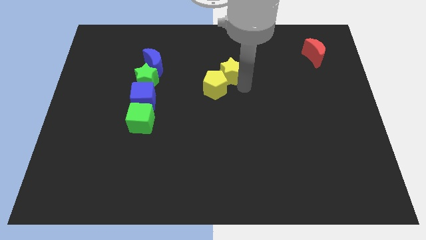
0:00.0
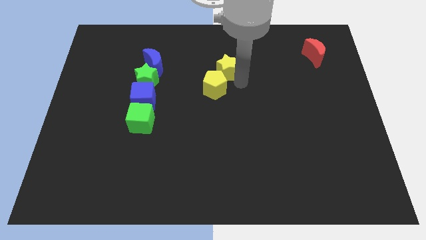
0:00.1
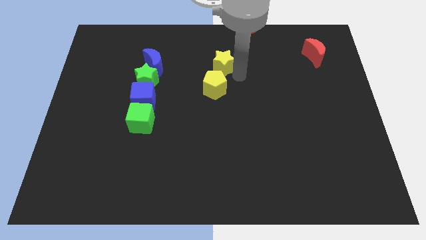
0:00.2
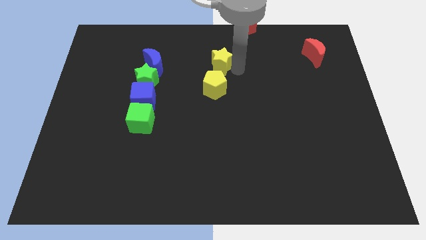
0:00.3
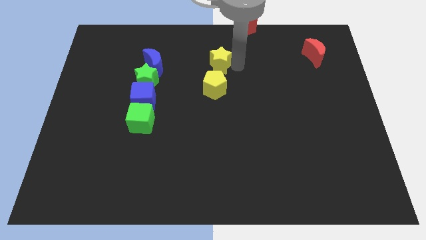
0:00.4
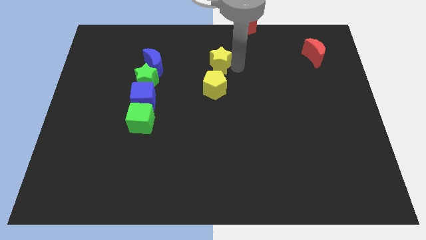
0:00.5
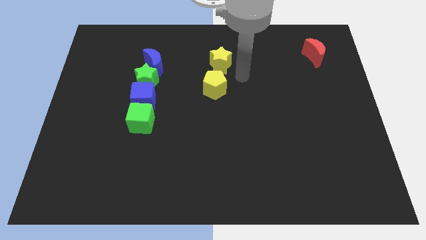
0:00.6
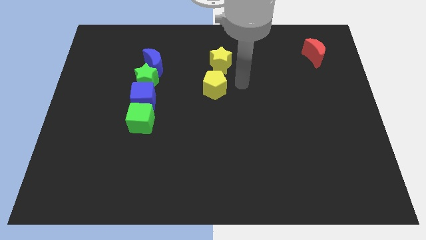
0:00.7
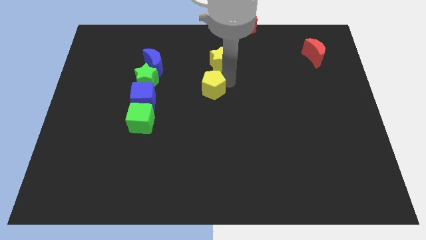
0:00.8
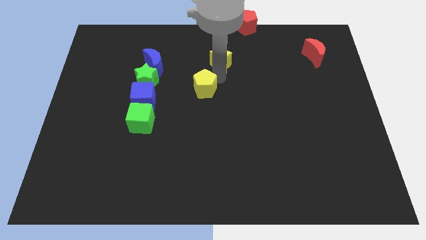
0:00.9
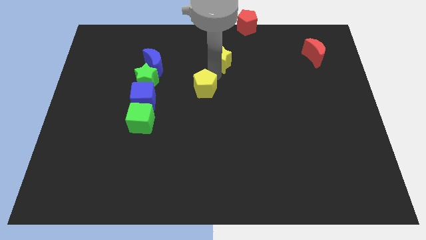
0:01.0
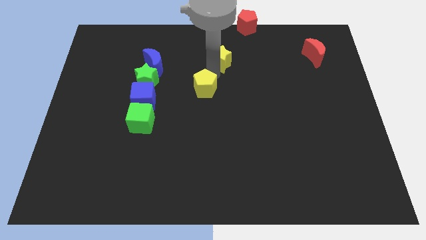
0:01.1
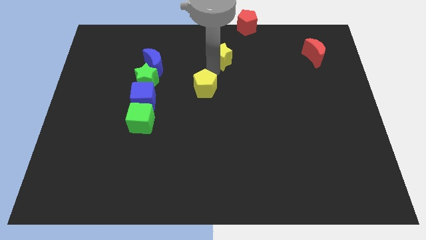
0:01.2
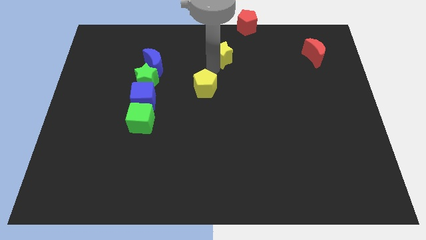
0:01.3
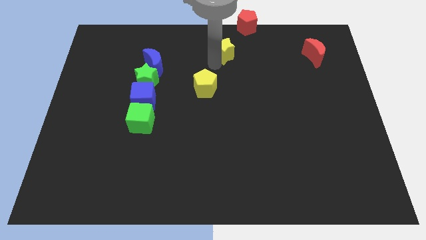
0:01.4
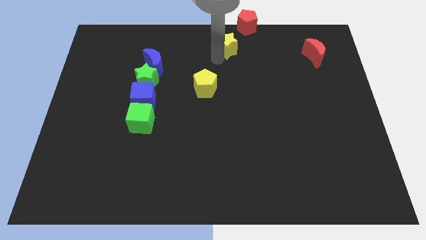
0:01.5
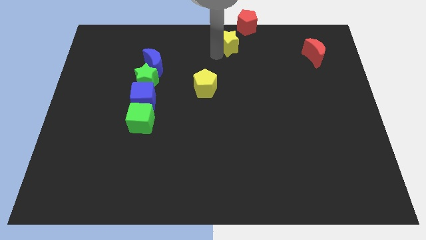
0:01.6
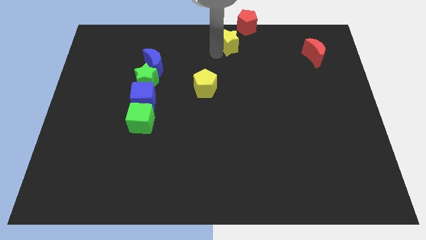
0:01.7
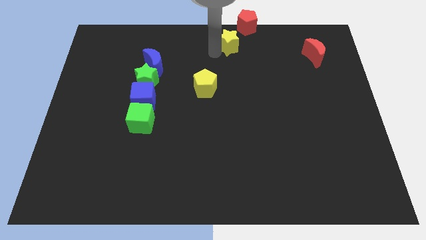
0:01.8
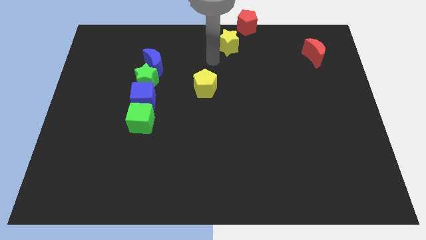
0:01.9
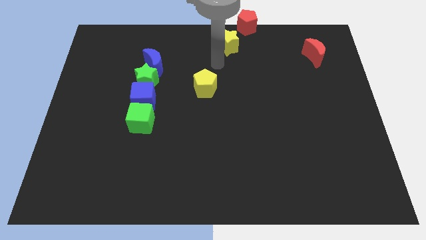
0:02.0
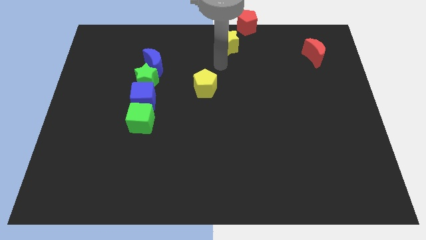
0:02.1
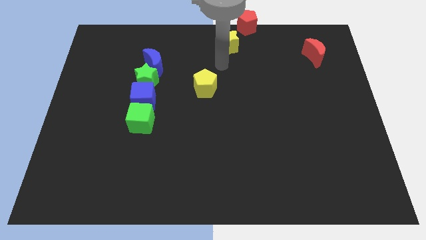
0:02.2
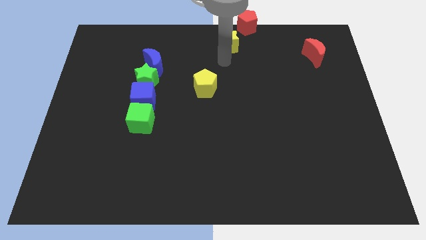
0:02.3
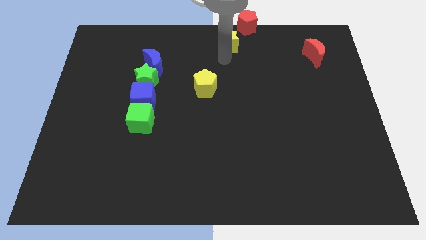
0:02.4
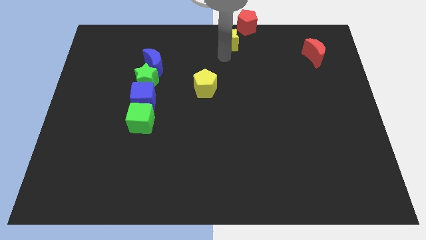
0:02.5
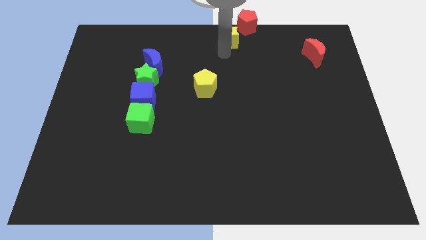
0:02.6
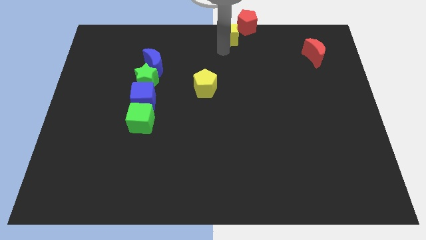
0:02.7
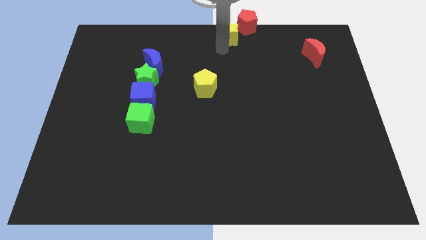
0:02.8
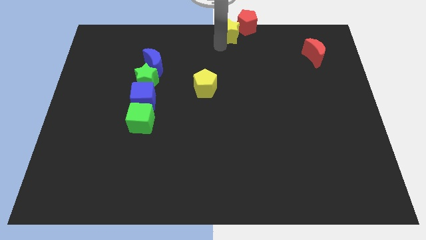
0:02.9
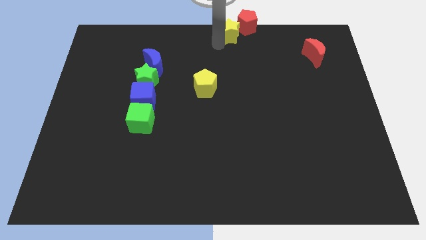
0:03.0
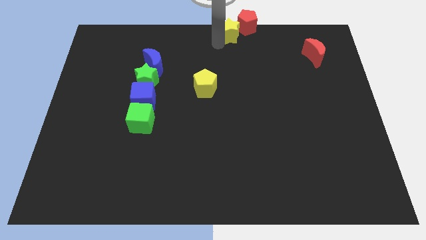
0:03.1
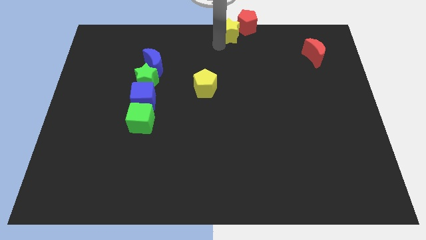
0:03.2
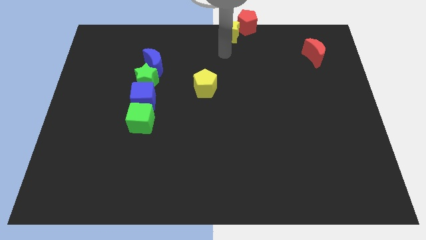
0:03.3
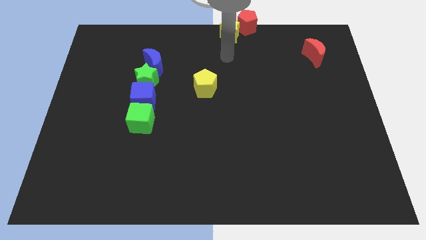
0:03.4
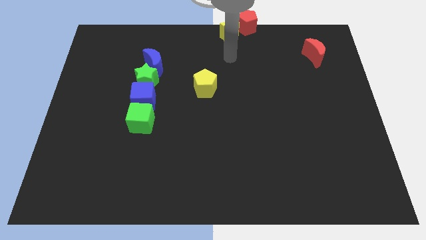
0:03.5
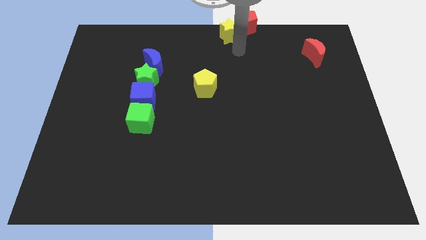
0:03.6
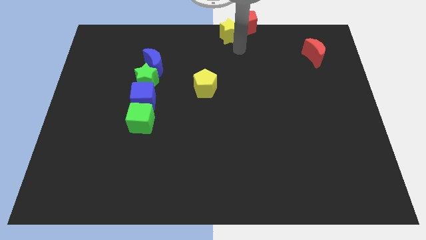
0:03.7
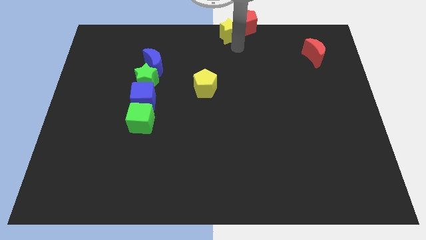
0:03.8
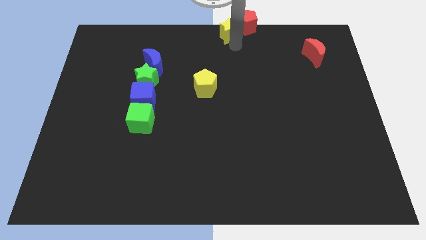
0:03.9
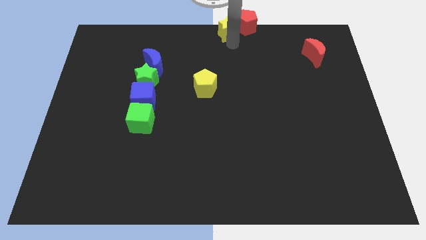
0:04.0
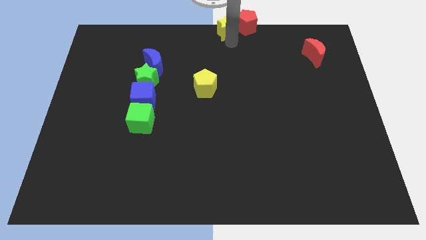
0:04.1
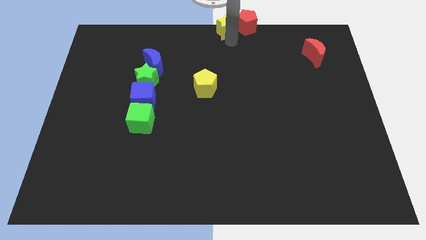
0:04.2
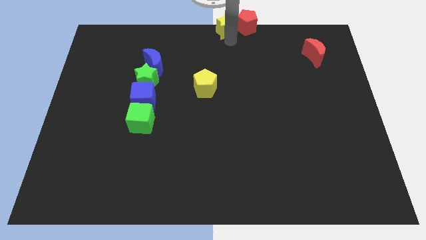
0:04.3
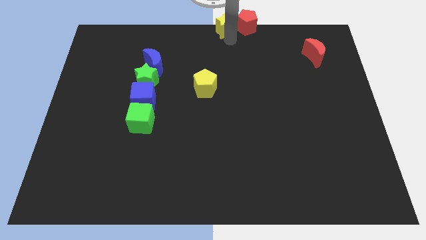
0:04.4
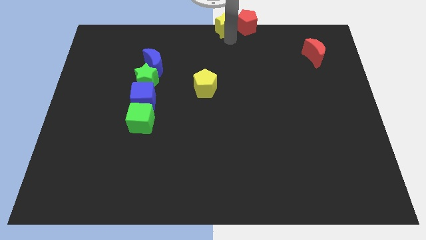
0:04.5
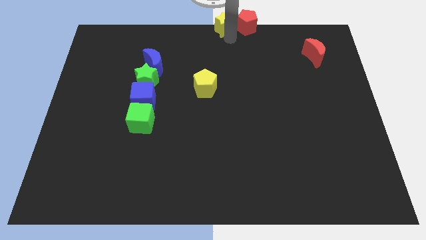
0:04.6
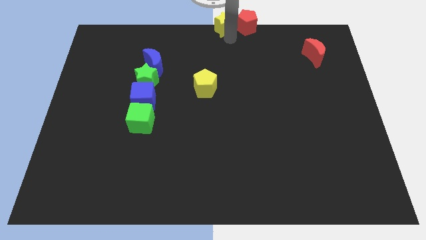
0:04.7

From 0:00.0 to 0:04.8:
move the yellow star to the left side of the red pentagon

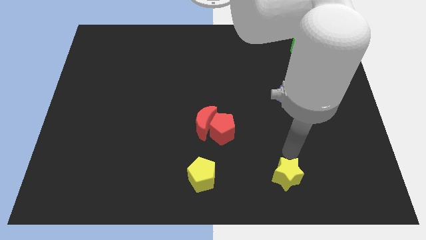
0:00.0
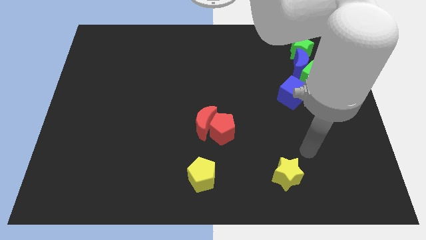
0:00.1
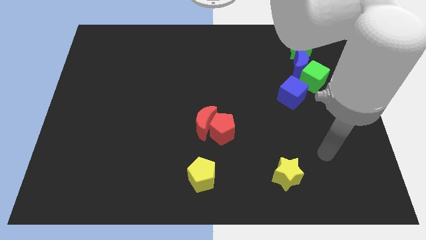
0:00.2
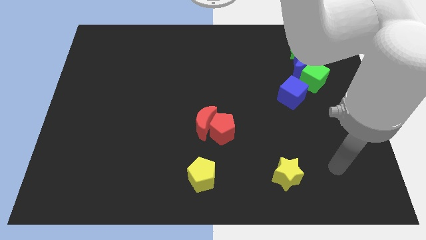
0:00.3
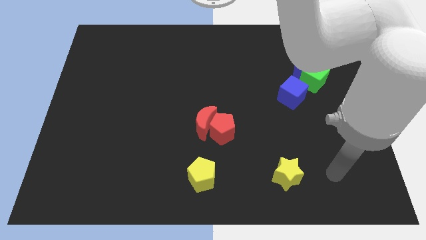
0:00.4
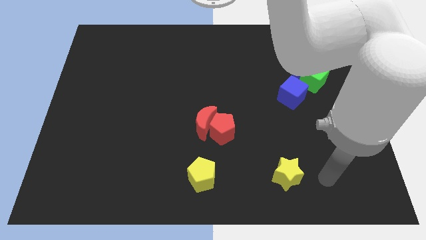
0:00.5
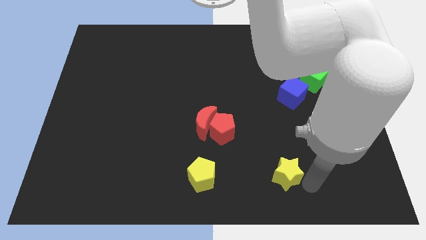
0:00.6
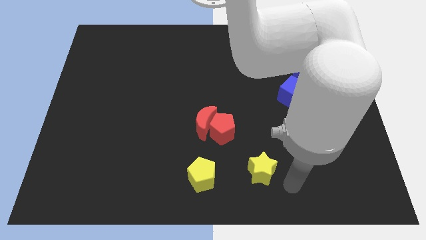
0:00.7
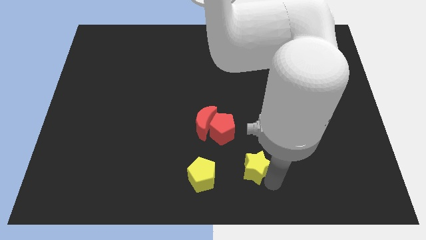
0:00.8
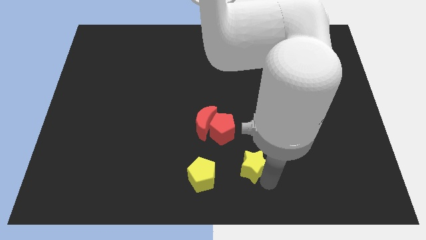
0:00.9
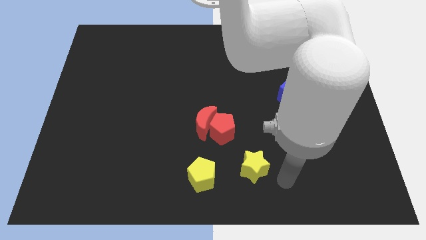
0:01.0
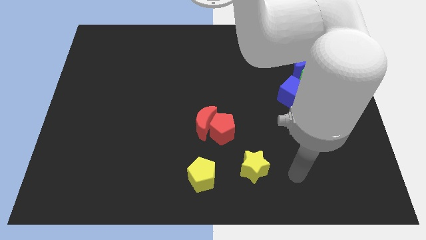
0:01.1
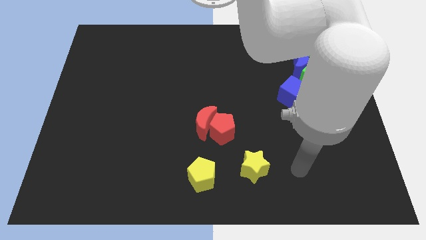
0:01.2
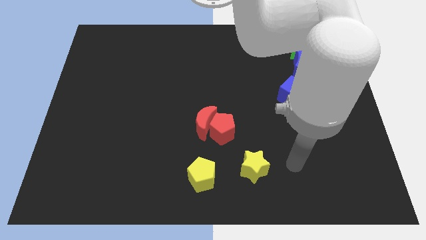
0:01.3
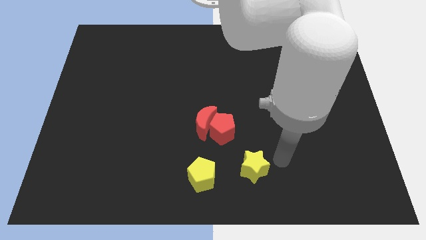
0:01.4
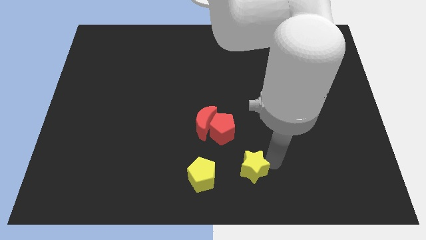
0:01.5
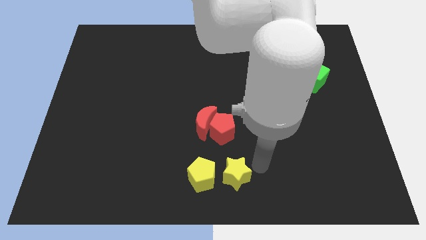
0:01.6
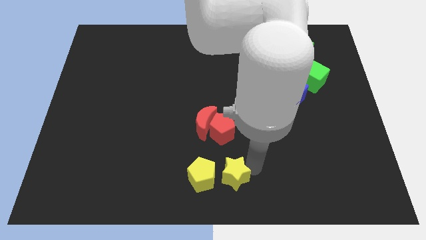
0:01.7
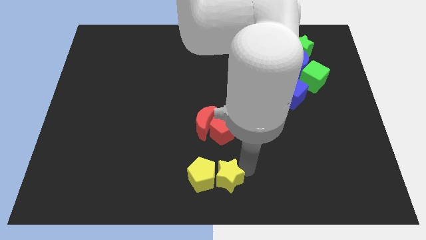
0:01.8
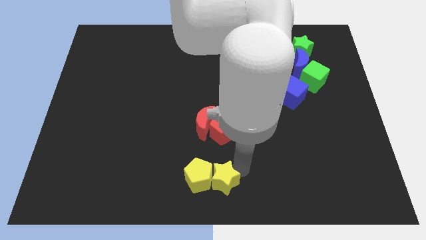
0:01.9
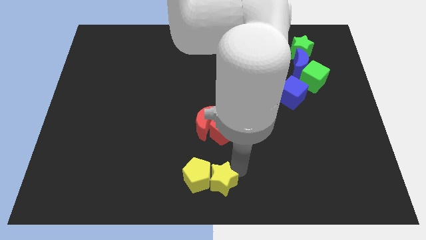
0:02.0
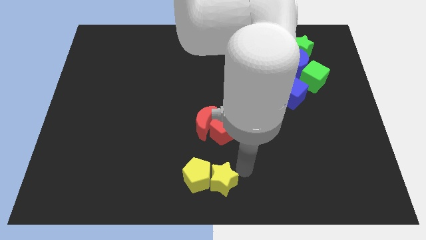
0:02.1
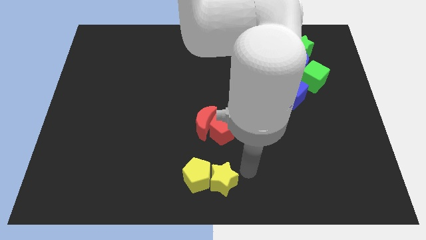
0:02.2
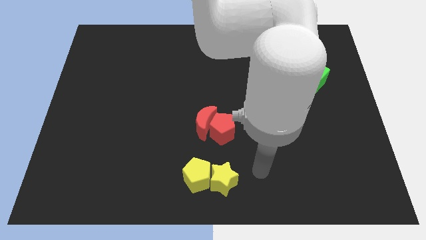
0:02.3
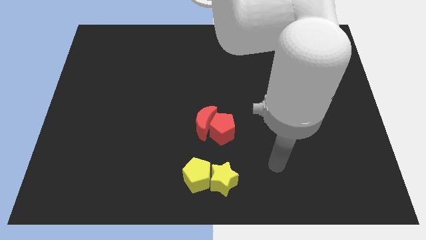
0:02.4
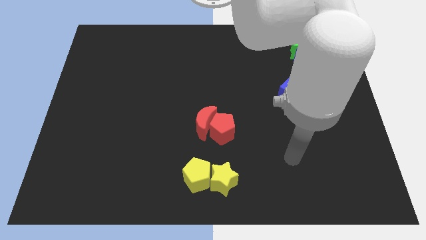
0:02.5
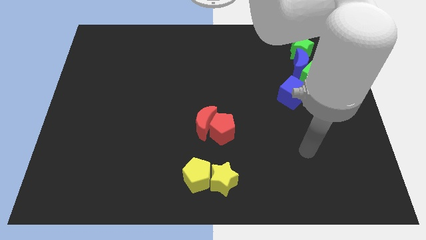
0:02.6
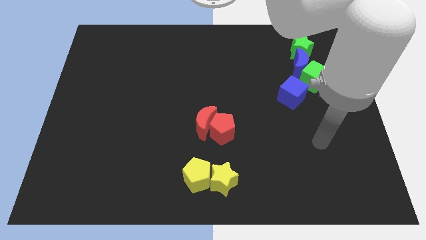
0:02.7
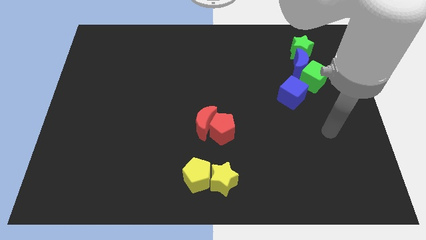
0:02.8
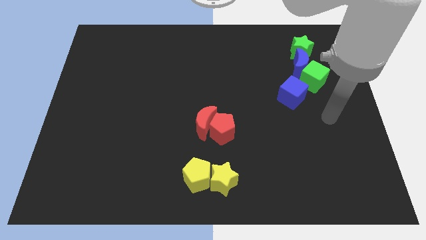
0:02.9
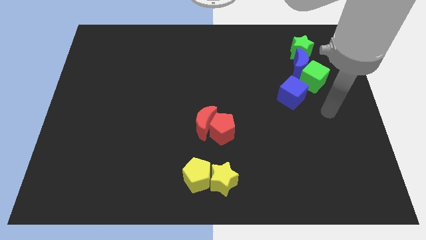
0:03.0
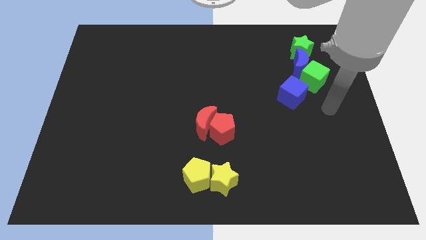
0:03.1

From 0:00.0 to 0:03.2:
push the yellow star into the yellow pentagon

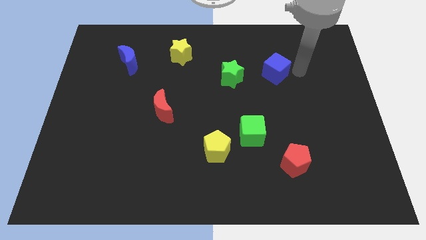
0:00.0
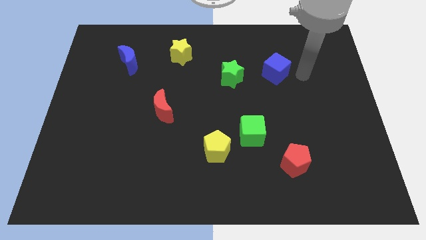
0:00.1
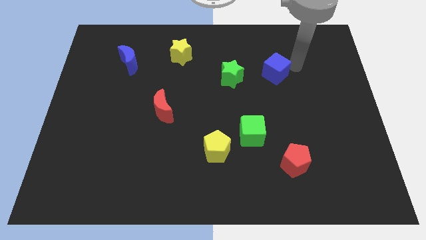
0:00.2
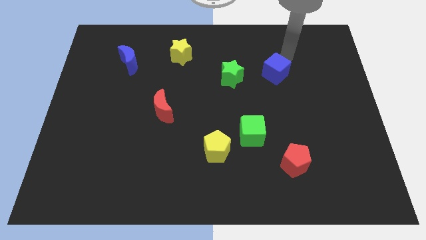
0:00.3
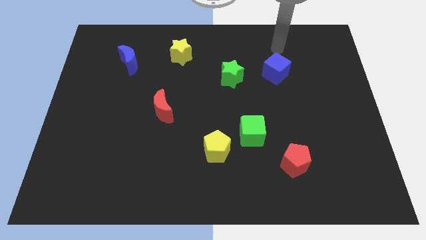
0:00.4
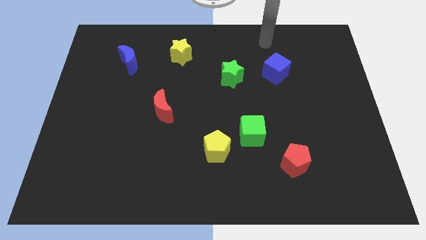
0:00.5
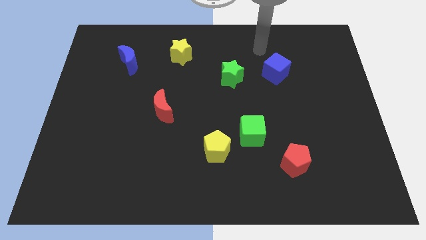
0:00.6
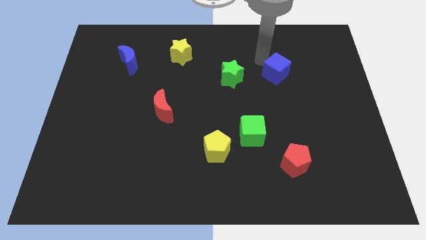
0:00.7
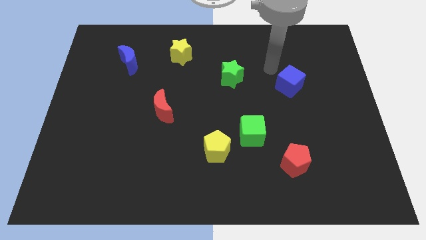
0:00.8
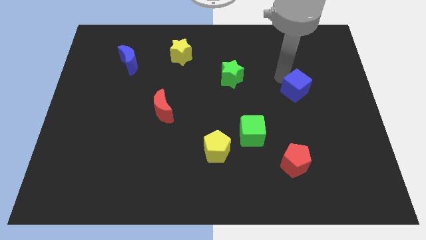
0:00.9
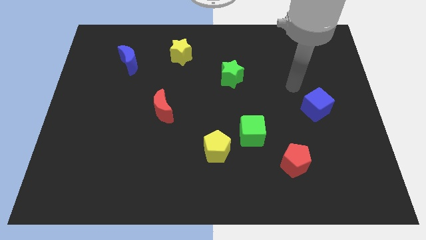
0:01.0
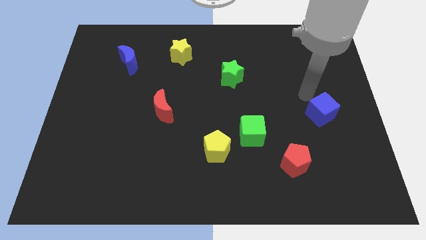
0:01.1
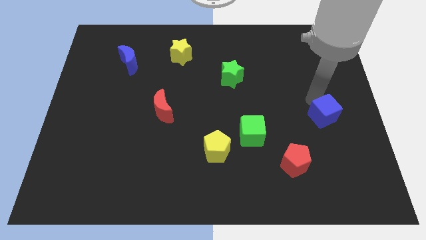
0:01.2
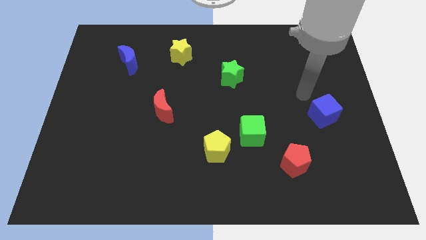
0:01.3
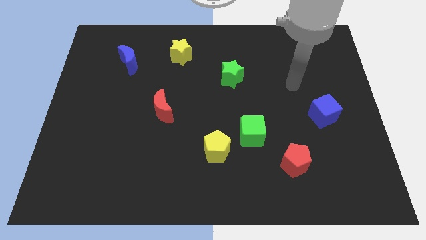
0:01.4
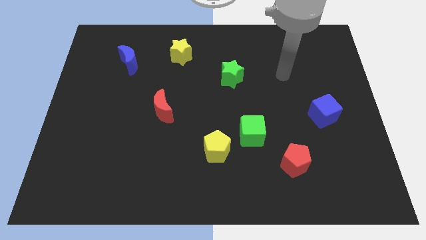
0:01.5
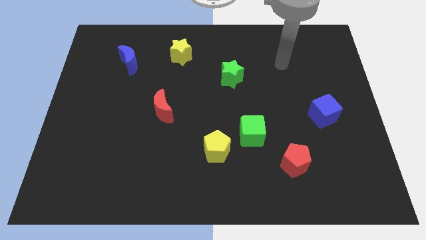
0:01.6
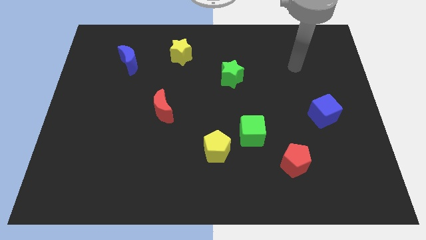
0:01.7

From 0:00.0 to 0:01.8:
place the blue cube horizontally to the right side of the red crescent
